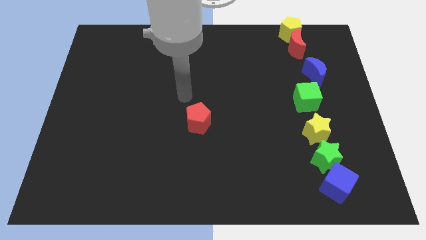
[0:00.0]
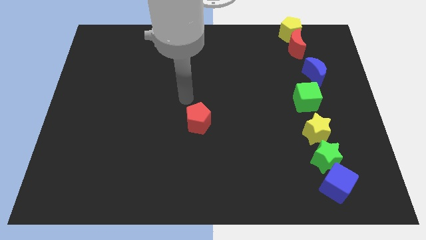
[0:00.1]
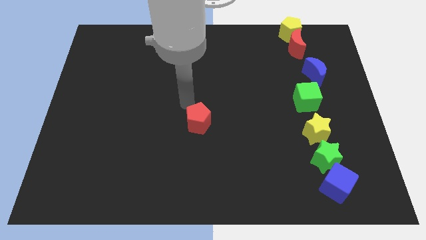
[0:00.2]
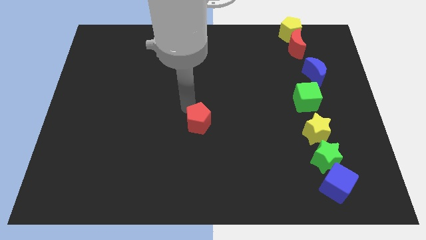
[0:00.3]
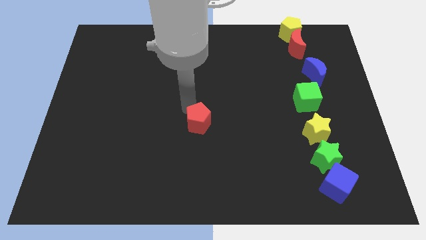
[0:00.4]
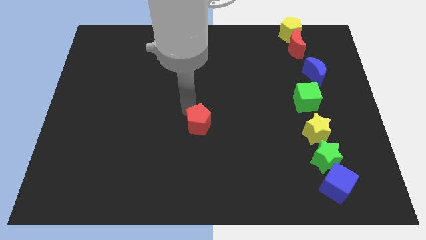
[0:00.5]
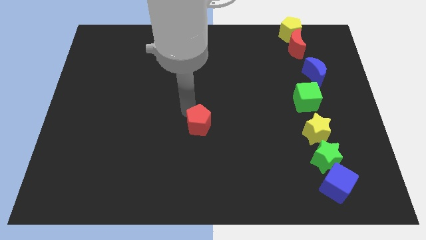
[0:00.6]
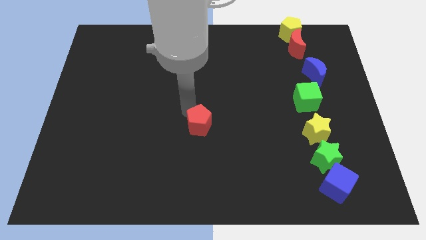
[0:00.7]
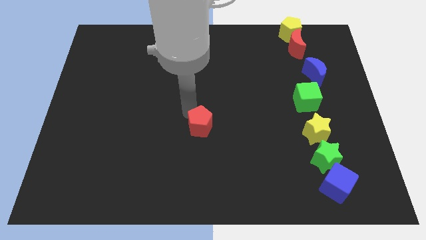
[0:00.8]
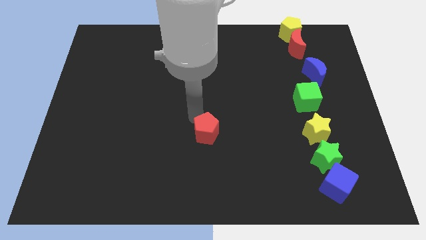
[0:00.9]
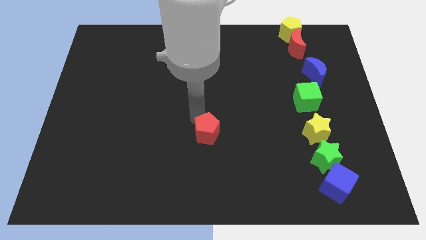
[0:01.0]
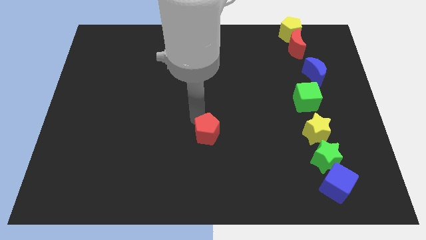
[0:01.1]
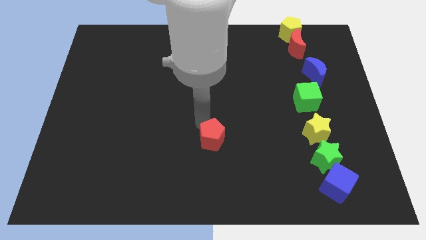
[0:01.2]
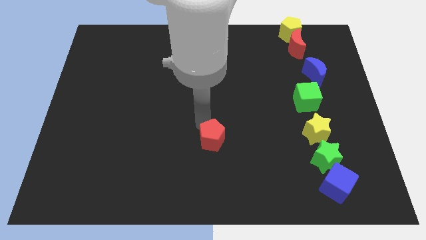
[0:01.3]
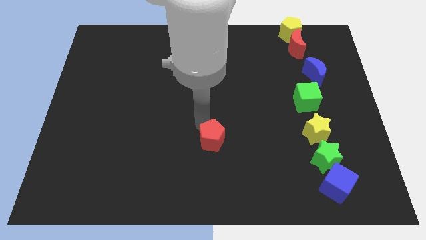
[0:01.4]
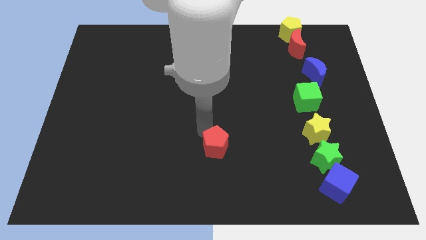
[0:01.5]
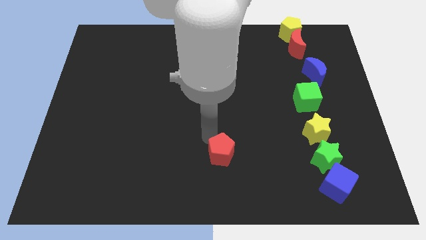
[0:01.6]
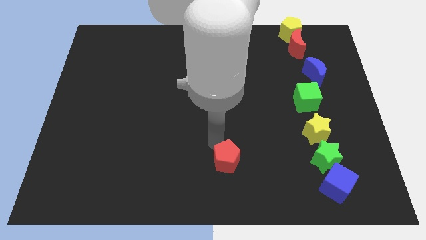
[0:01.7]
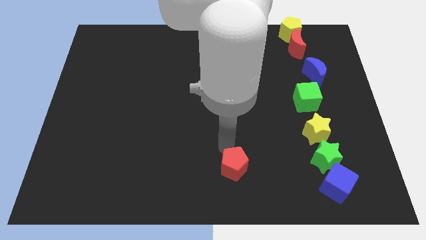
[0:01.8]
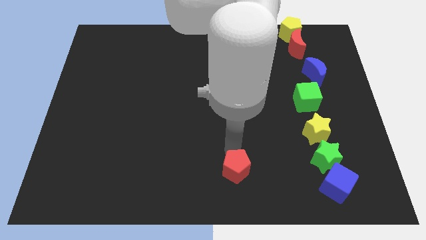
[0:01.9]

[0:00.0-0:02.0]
push red pentagon diagonally towards bottom

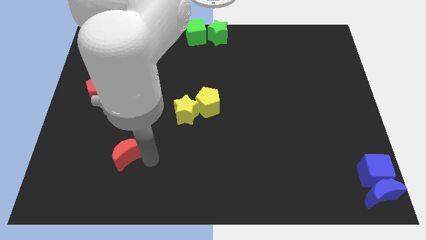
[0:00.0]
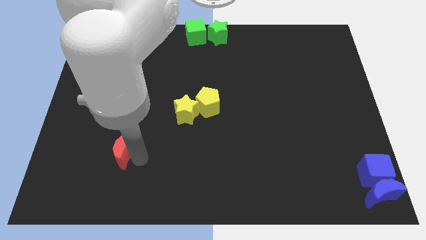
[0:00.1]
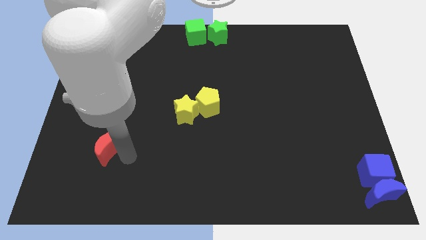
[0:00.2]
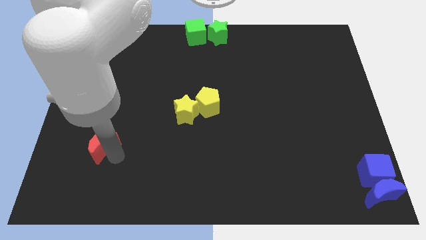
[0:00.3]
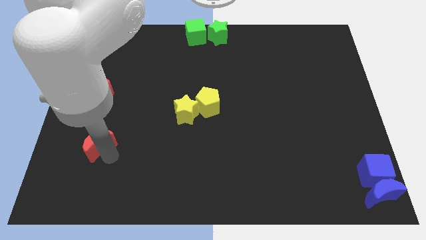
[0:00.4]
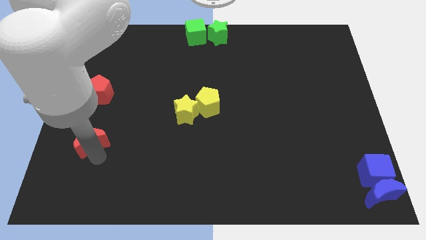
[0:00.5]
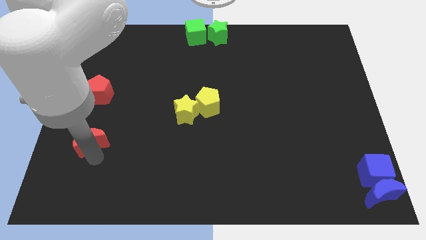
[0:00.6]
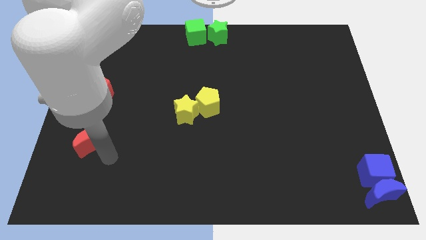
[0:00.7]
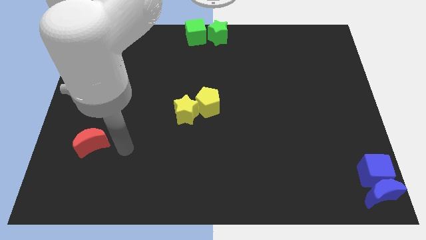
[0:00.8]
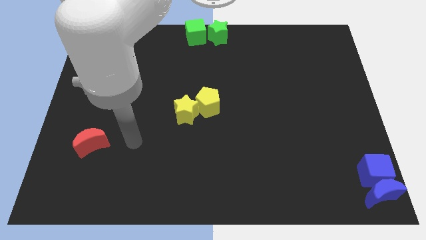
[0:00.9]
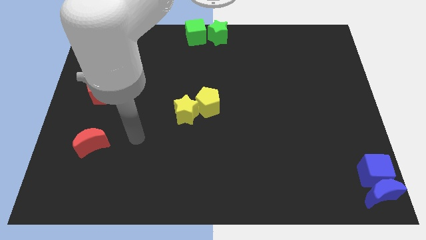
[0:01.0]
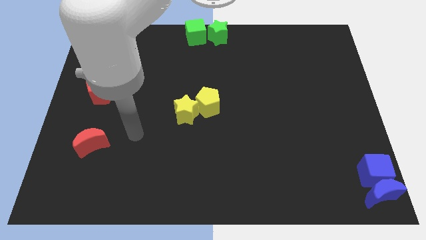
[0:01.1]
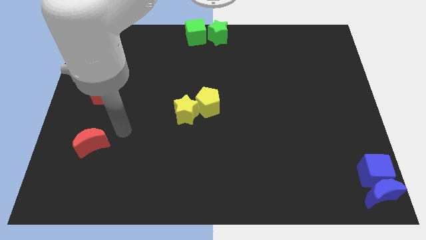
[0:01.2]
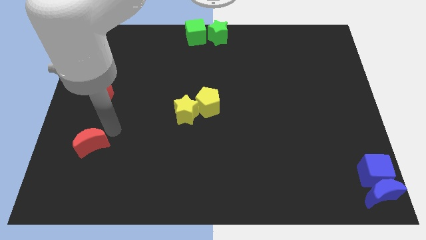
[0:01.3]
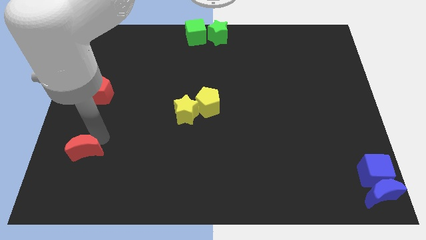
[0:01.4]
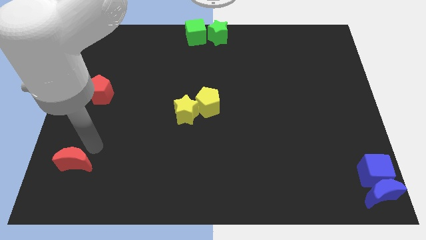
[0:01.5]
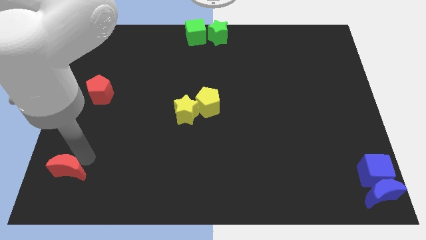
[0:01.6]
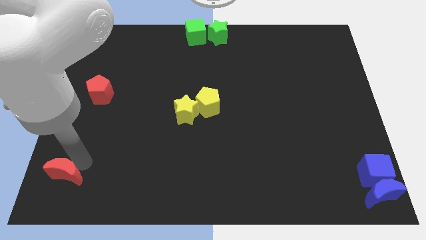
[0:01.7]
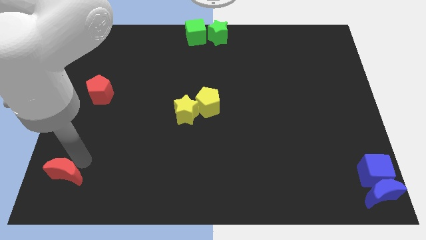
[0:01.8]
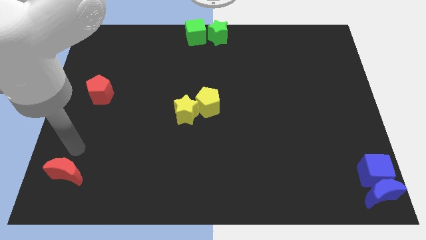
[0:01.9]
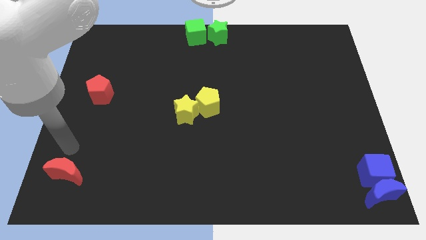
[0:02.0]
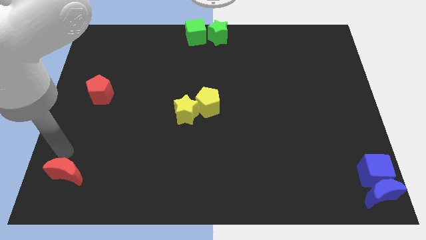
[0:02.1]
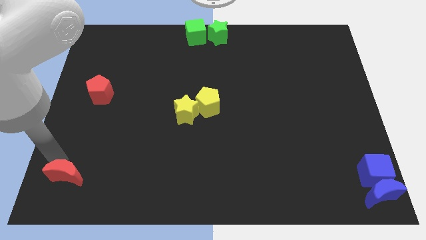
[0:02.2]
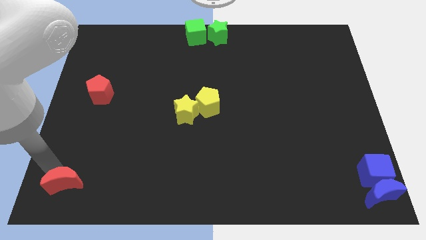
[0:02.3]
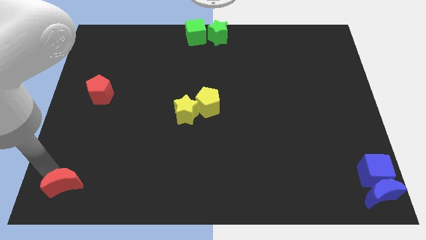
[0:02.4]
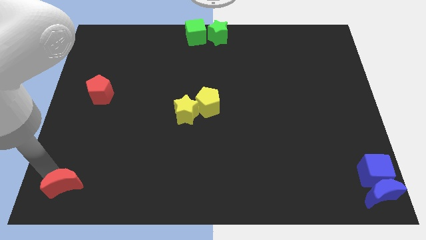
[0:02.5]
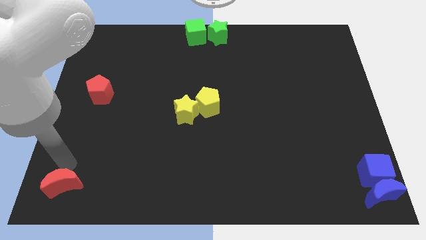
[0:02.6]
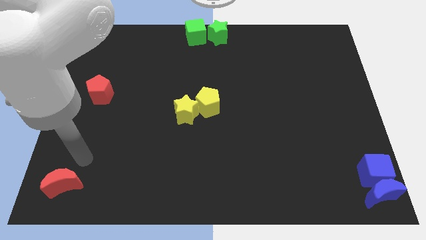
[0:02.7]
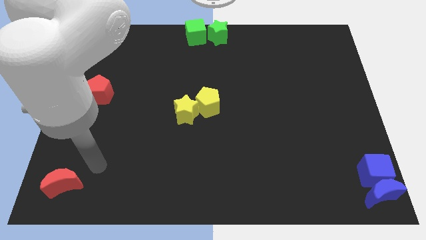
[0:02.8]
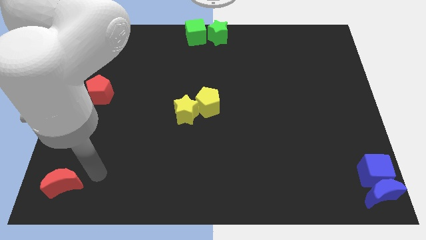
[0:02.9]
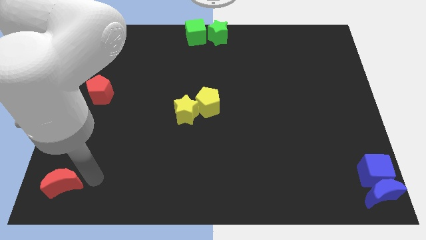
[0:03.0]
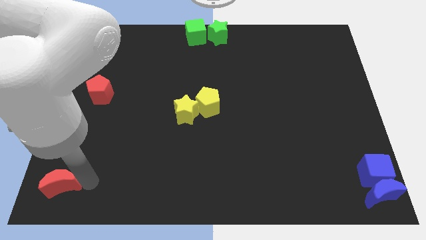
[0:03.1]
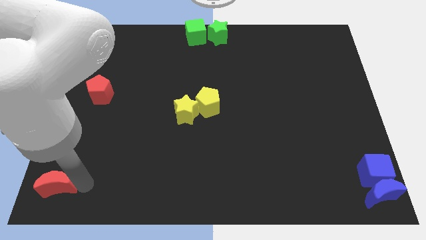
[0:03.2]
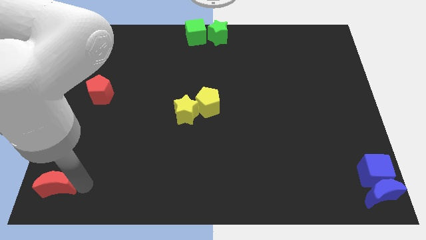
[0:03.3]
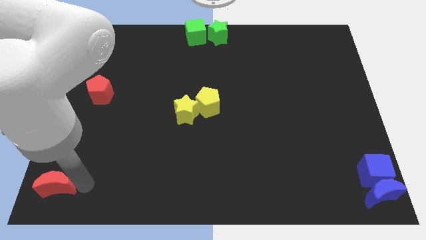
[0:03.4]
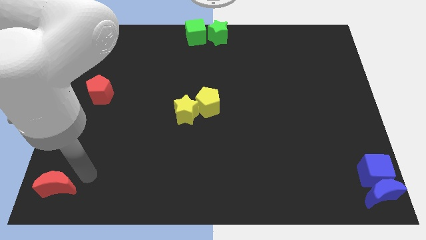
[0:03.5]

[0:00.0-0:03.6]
move the red moon to the bottom left of the board

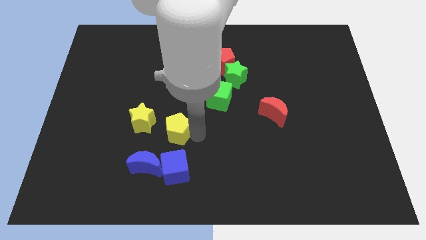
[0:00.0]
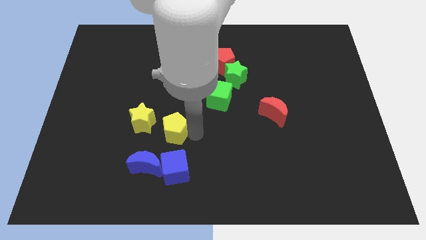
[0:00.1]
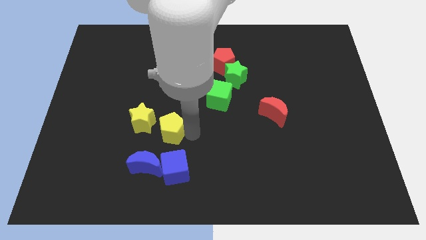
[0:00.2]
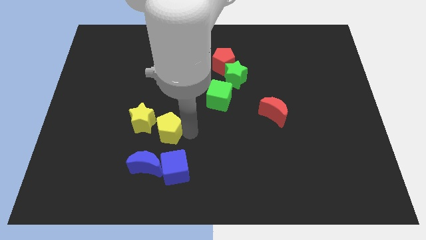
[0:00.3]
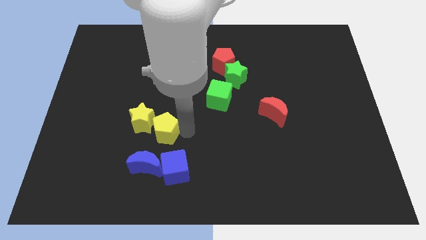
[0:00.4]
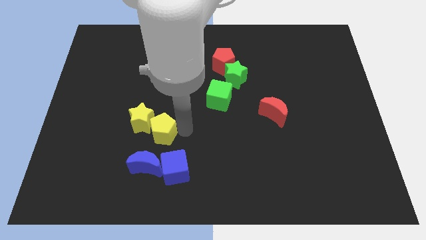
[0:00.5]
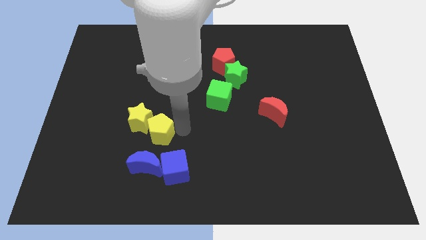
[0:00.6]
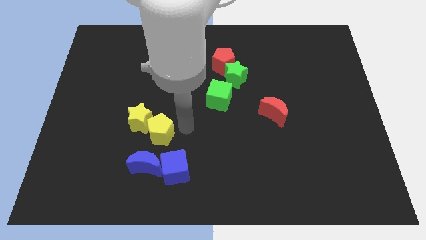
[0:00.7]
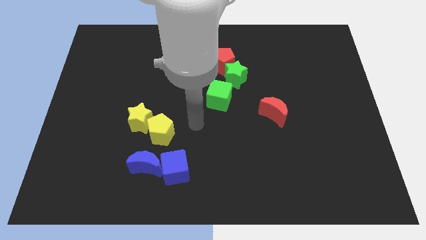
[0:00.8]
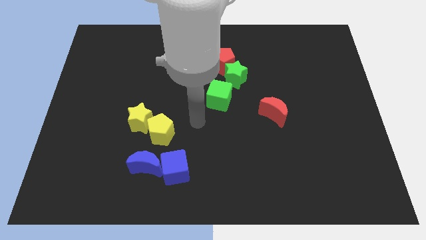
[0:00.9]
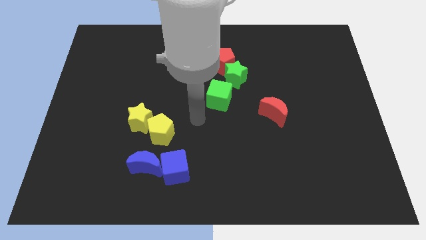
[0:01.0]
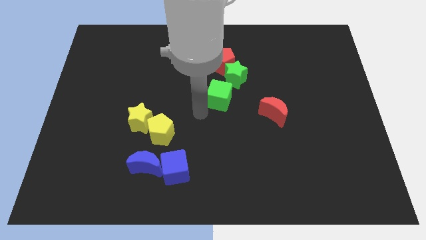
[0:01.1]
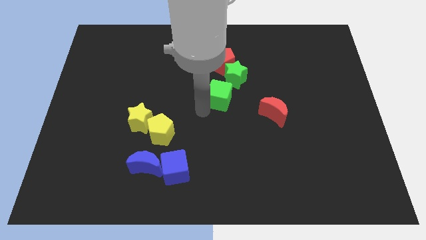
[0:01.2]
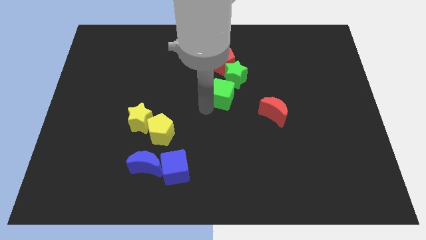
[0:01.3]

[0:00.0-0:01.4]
push yellow pentagon into yellow star

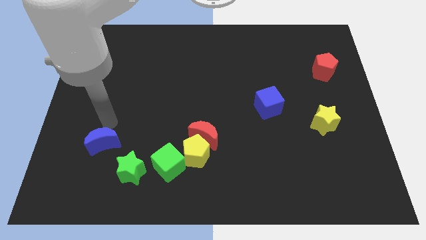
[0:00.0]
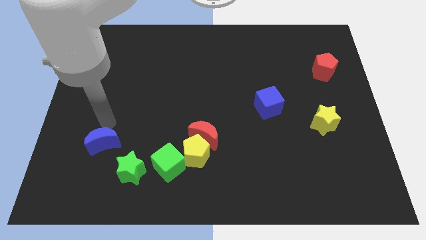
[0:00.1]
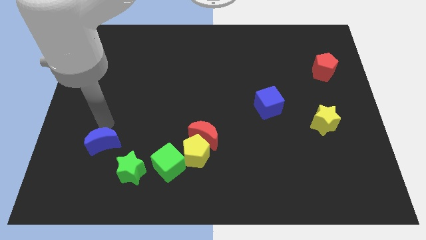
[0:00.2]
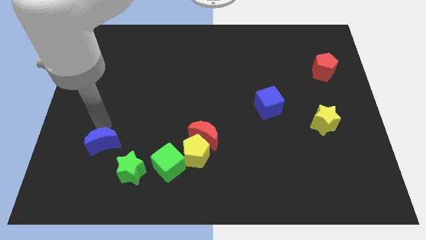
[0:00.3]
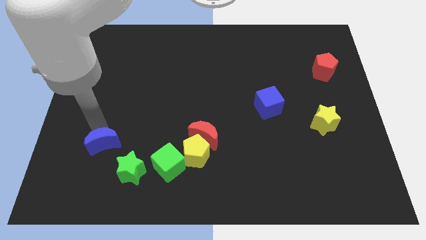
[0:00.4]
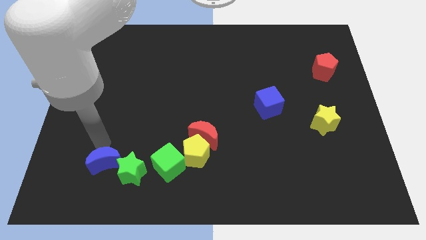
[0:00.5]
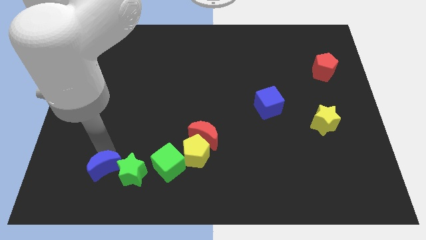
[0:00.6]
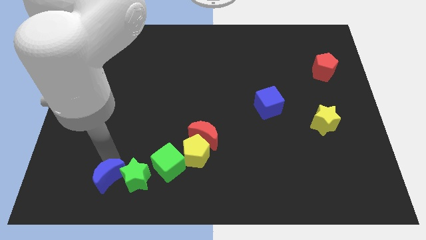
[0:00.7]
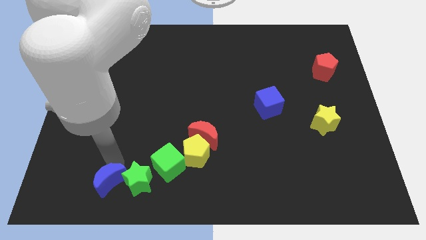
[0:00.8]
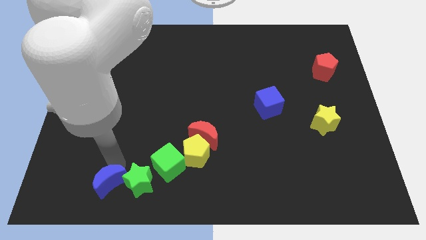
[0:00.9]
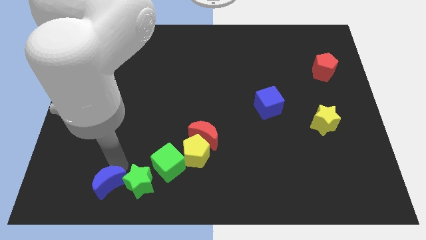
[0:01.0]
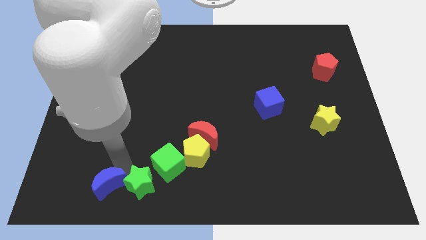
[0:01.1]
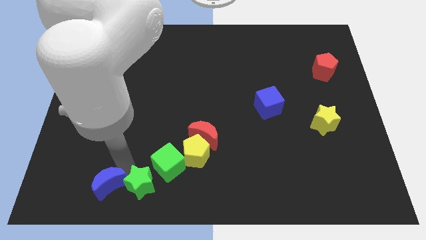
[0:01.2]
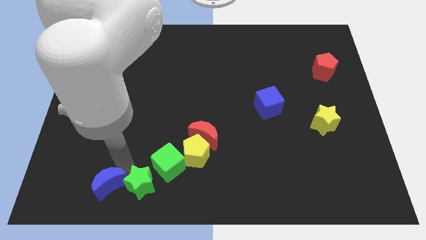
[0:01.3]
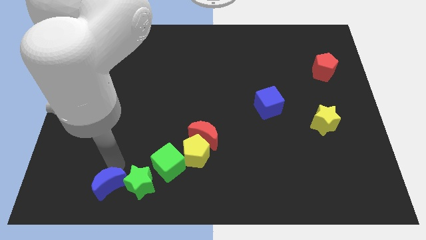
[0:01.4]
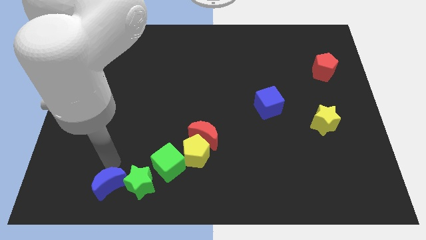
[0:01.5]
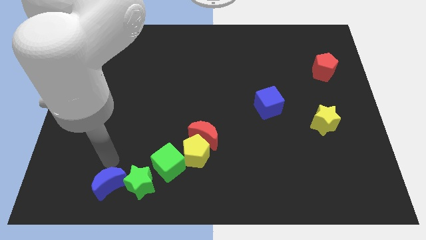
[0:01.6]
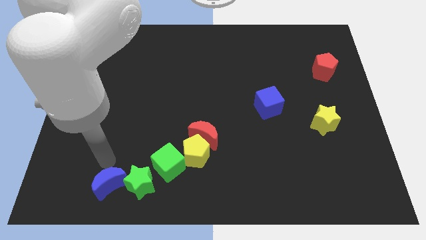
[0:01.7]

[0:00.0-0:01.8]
push the blue crescent into the green star

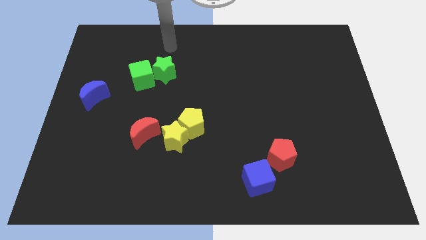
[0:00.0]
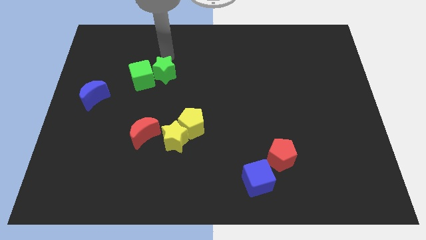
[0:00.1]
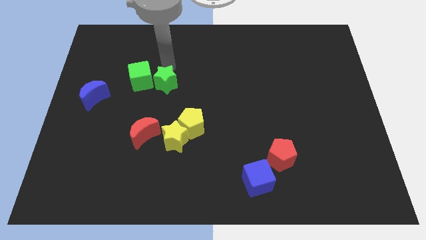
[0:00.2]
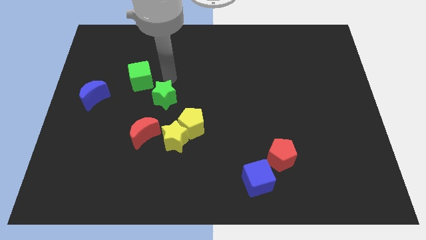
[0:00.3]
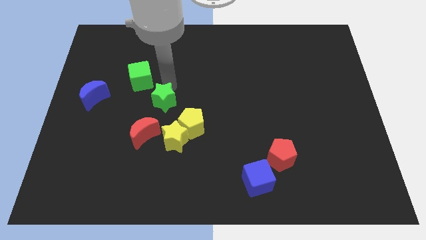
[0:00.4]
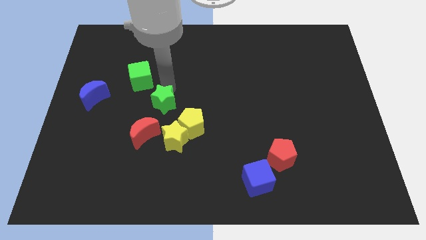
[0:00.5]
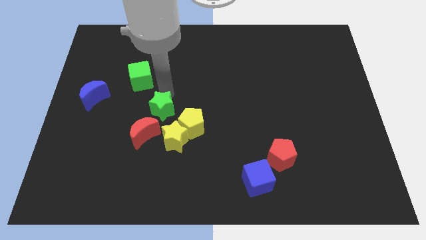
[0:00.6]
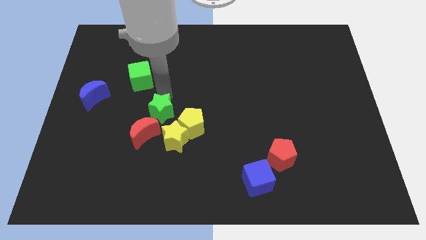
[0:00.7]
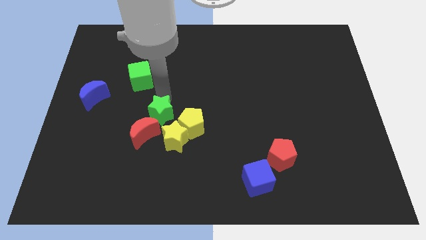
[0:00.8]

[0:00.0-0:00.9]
move the green star away from the green cube
